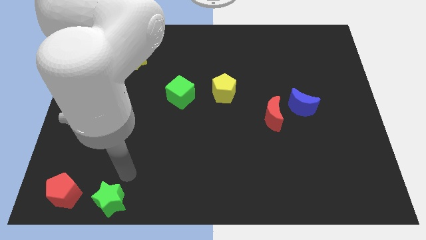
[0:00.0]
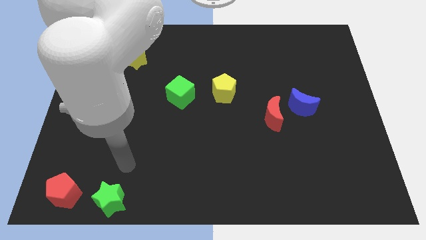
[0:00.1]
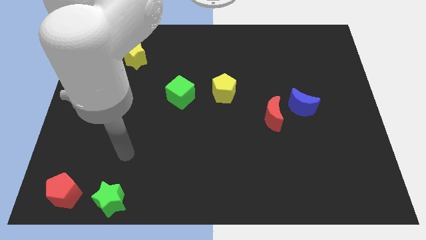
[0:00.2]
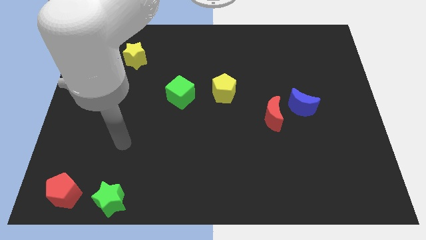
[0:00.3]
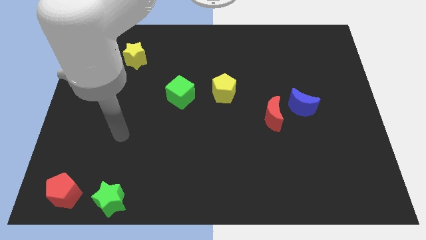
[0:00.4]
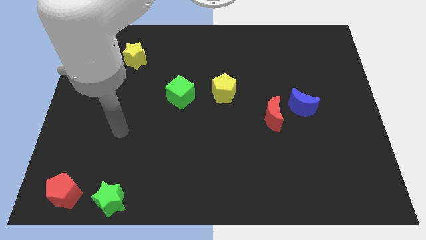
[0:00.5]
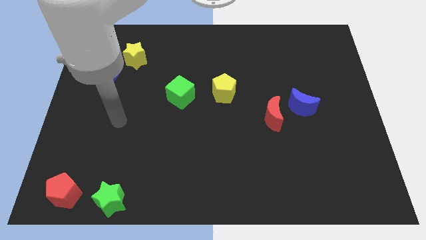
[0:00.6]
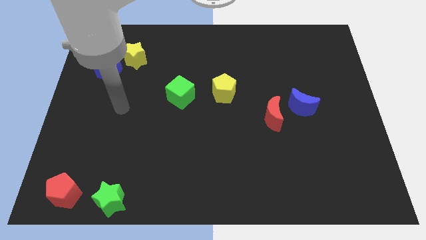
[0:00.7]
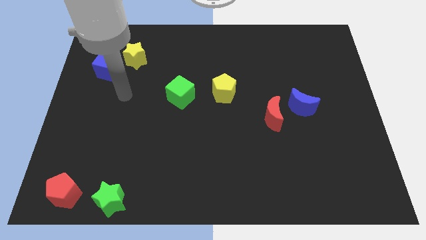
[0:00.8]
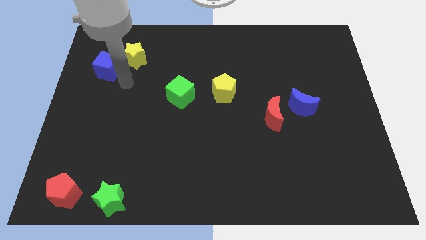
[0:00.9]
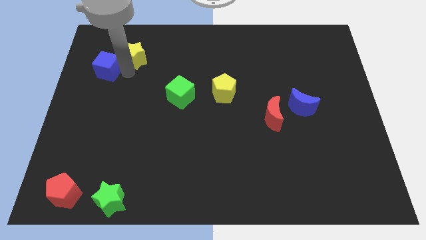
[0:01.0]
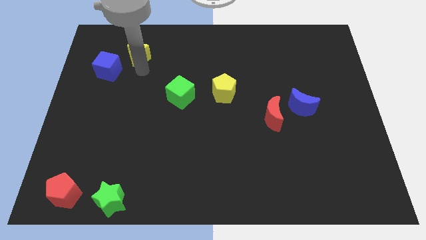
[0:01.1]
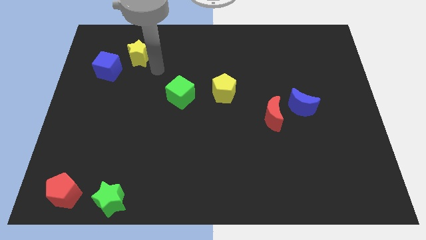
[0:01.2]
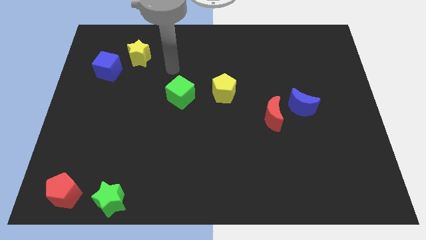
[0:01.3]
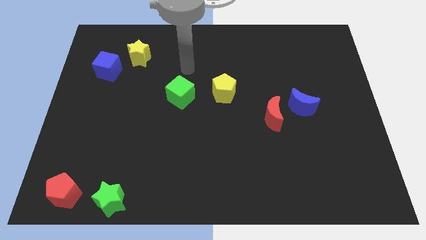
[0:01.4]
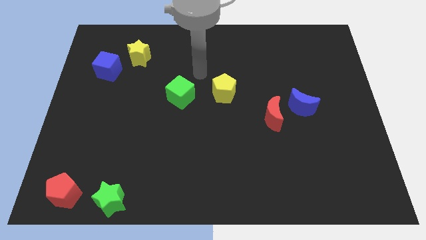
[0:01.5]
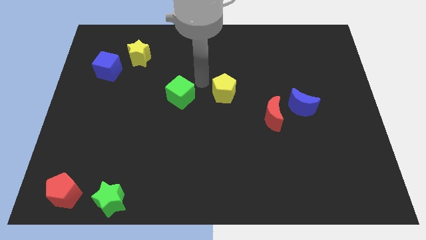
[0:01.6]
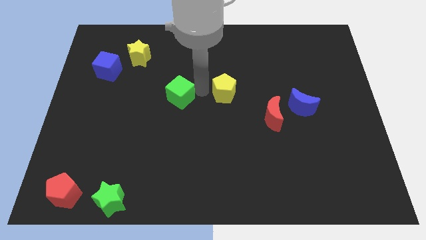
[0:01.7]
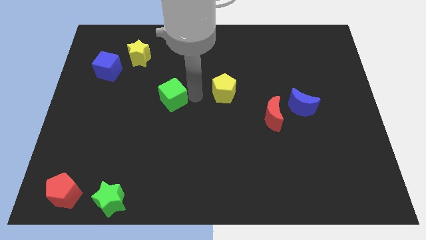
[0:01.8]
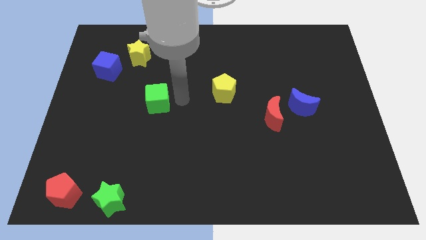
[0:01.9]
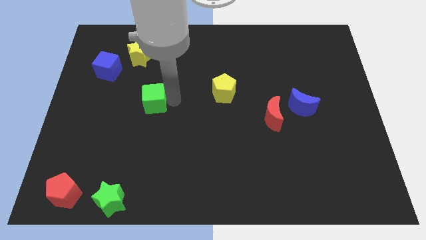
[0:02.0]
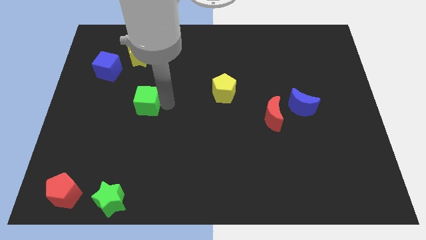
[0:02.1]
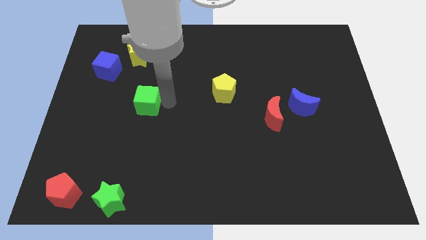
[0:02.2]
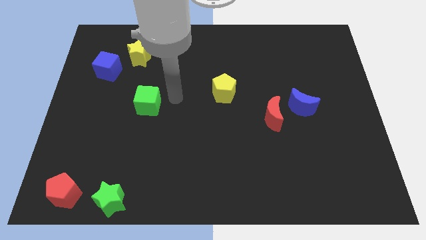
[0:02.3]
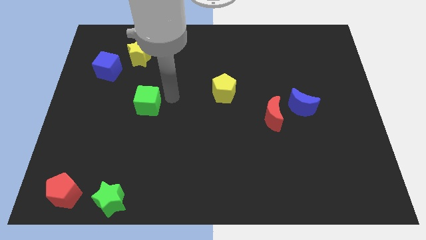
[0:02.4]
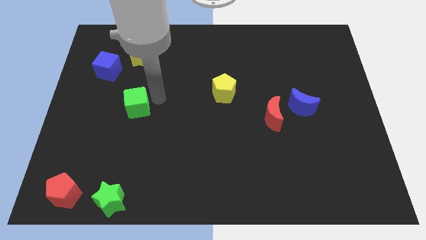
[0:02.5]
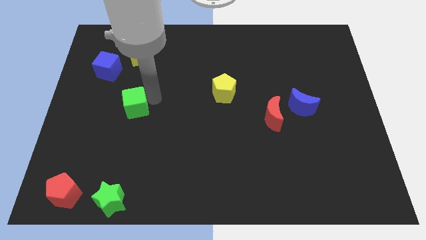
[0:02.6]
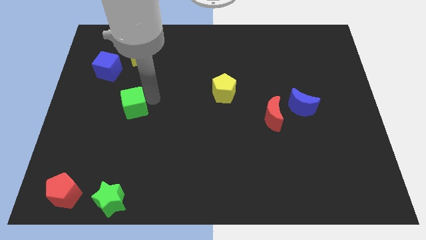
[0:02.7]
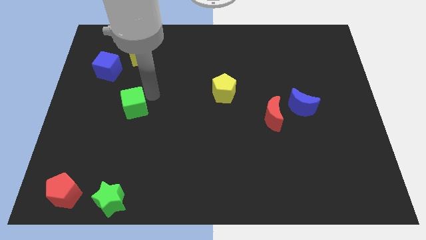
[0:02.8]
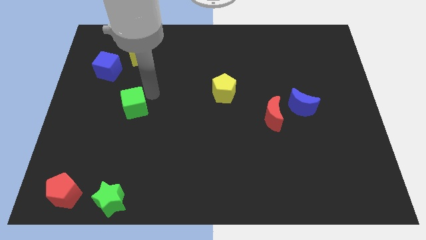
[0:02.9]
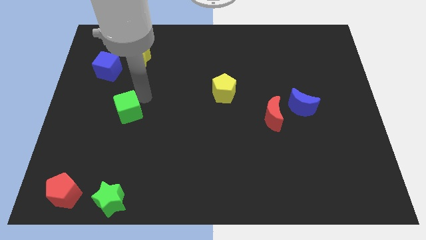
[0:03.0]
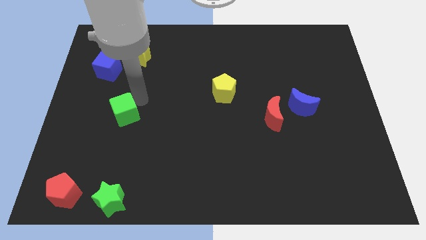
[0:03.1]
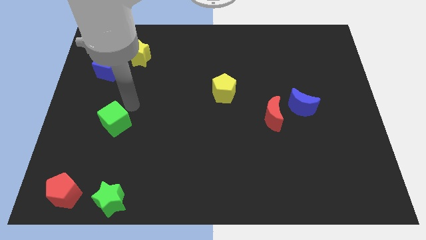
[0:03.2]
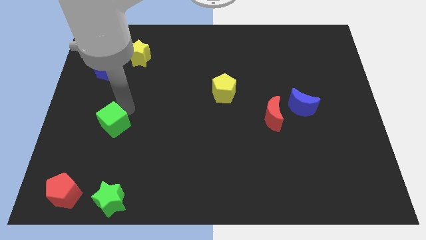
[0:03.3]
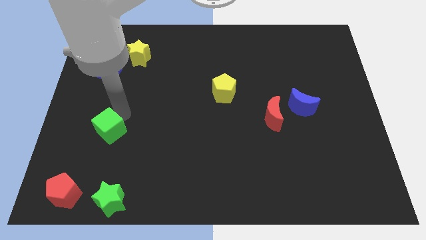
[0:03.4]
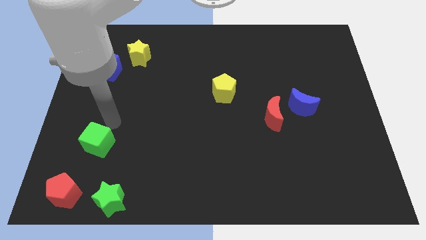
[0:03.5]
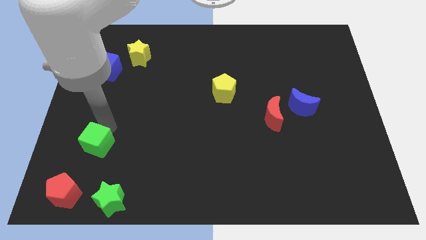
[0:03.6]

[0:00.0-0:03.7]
push the green cube to the bottom of the blue cube

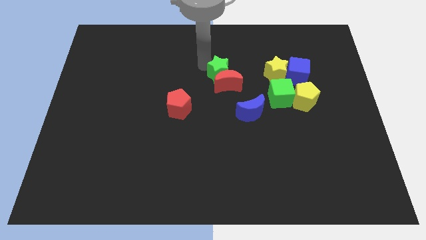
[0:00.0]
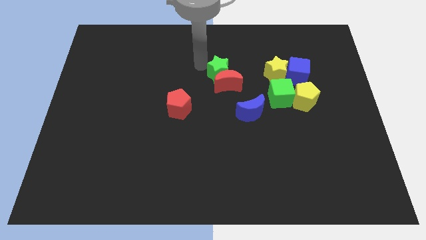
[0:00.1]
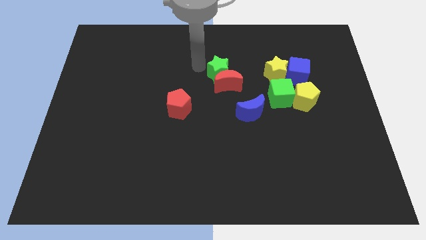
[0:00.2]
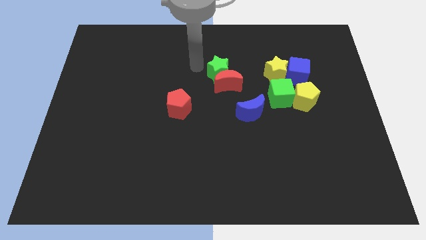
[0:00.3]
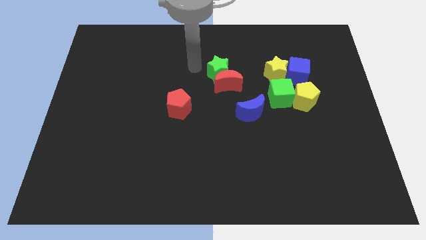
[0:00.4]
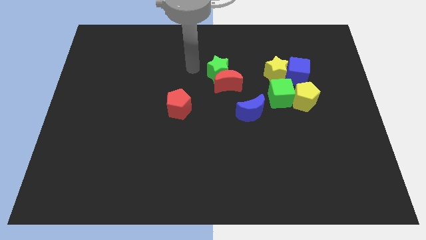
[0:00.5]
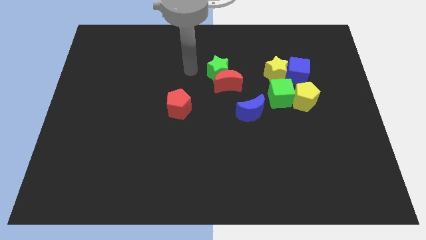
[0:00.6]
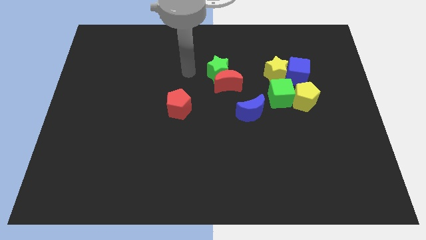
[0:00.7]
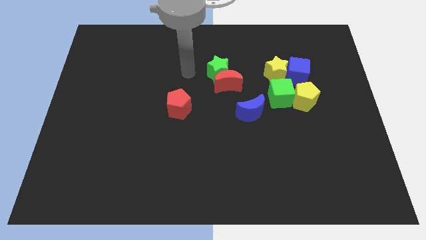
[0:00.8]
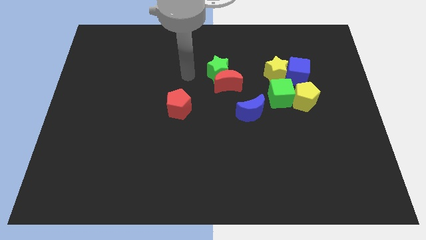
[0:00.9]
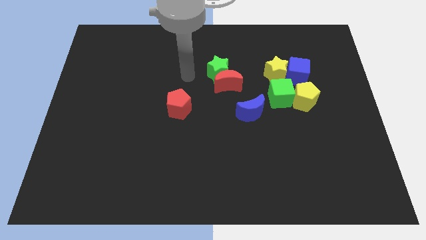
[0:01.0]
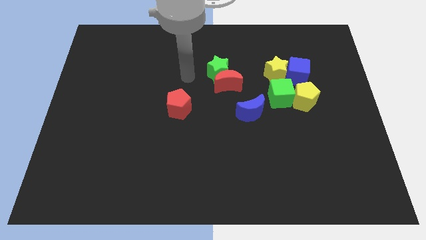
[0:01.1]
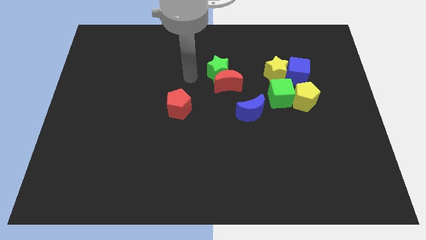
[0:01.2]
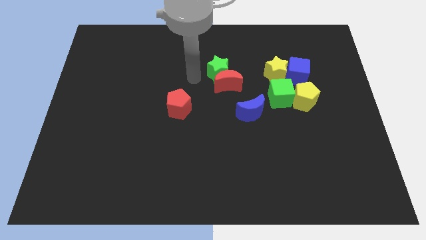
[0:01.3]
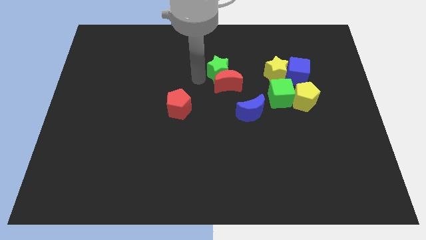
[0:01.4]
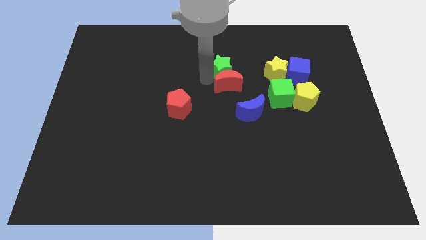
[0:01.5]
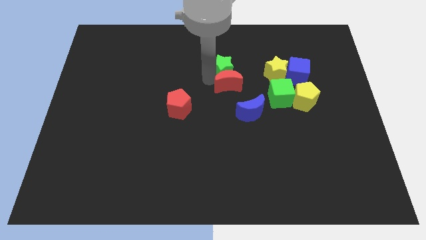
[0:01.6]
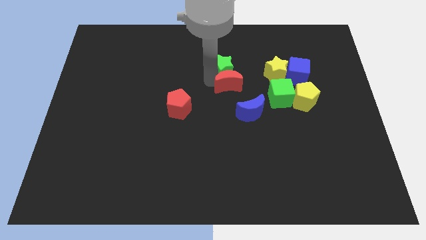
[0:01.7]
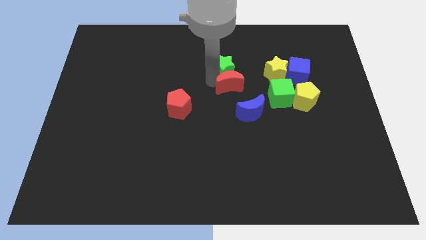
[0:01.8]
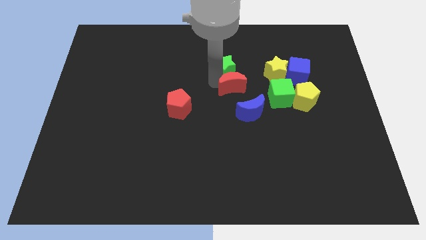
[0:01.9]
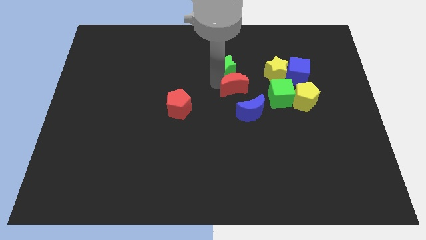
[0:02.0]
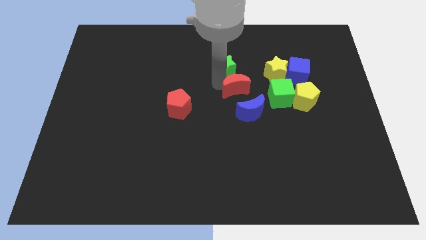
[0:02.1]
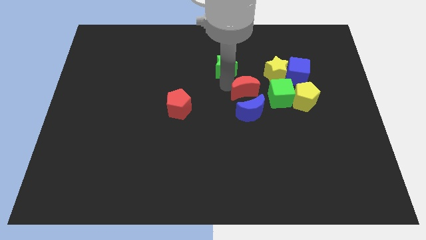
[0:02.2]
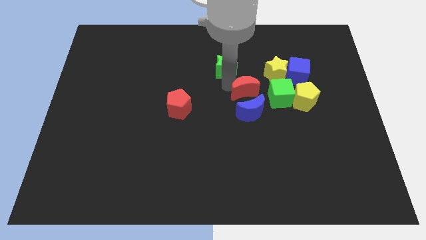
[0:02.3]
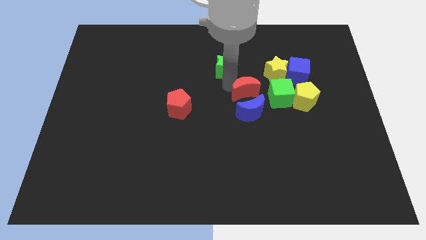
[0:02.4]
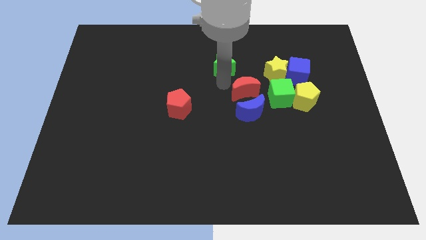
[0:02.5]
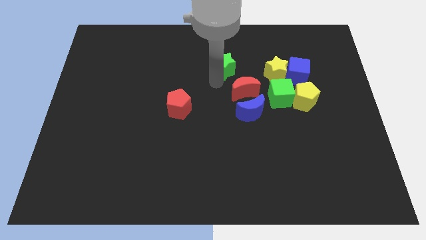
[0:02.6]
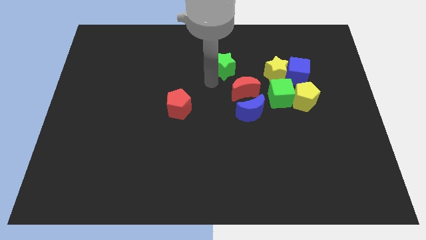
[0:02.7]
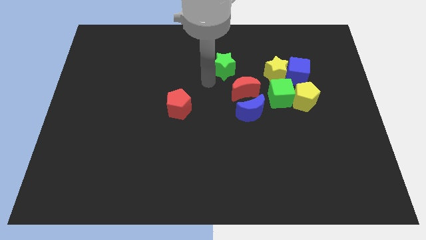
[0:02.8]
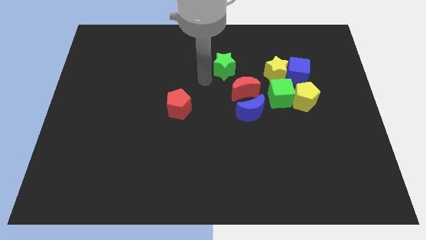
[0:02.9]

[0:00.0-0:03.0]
push the red crescent slightly towards the blue crescent

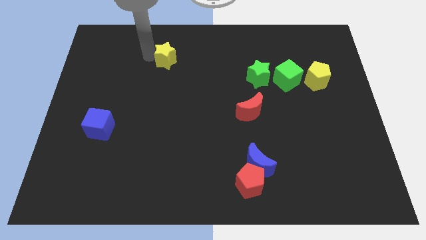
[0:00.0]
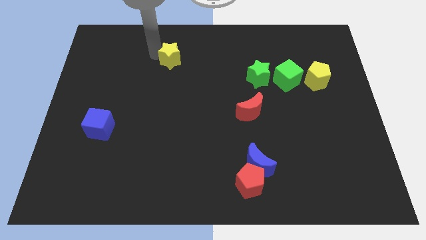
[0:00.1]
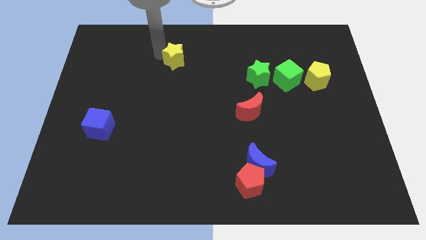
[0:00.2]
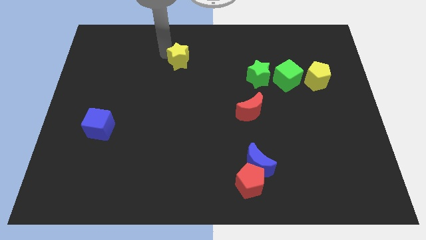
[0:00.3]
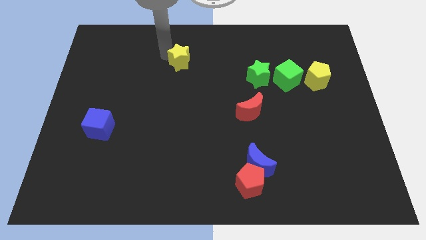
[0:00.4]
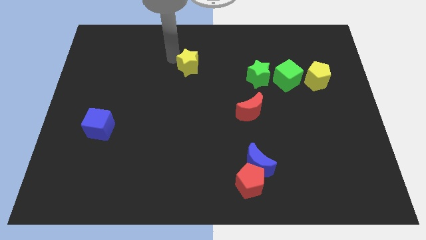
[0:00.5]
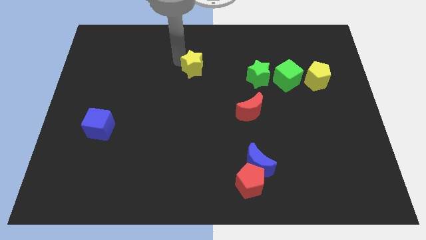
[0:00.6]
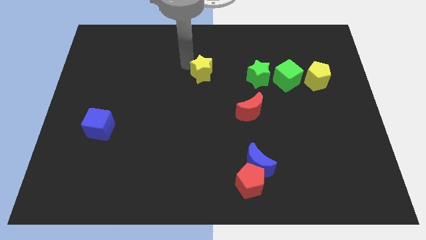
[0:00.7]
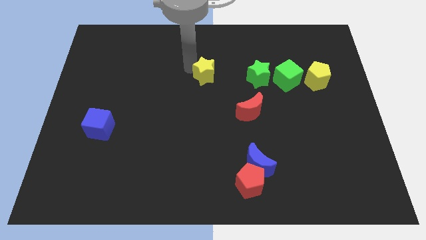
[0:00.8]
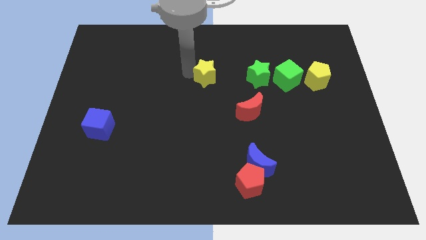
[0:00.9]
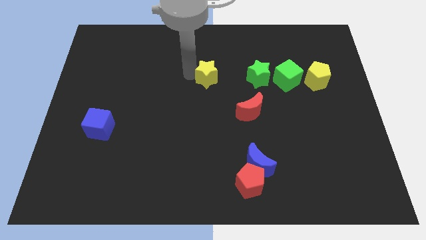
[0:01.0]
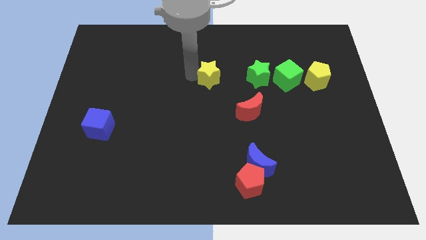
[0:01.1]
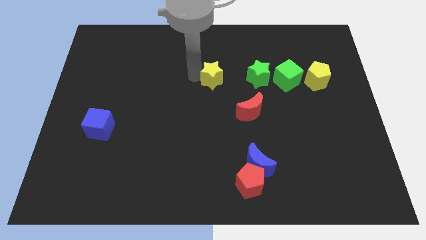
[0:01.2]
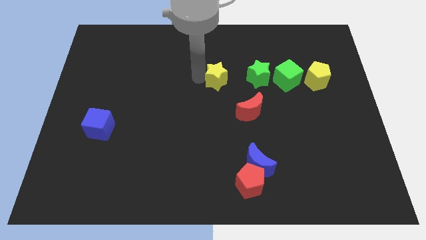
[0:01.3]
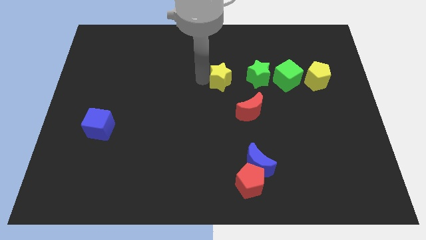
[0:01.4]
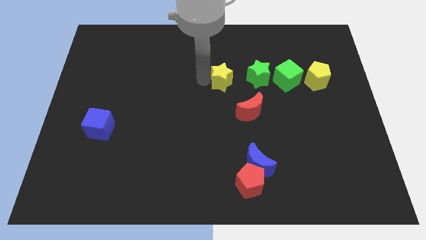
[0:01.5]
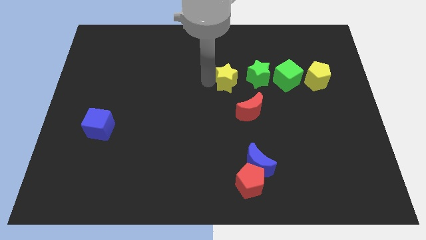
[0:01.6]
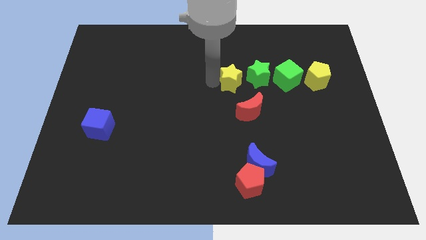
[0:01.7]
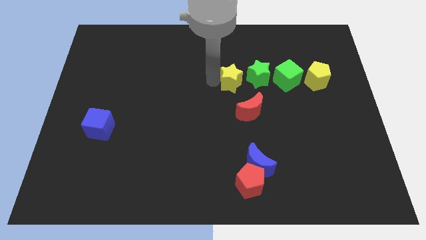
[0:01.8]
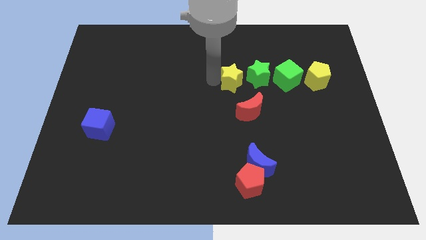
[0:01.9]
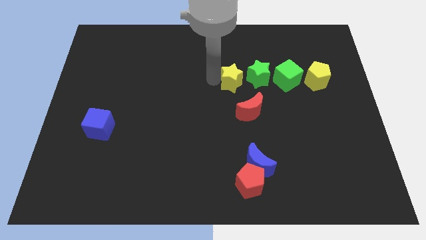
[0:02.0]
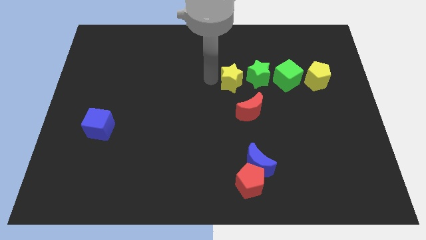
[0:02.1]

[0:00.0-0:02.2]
place the yellow star to the left of green star

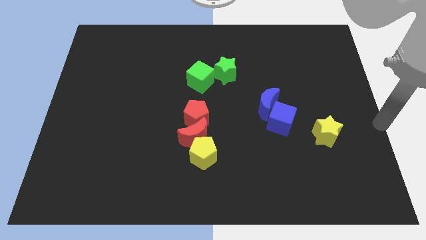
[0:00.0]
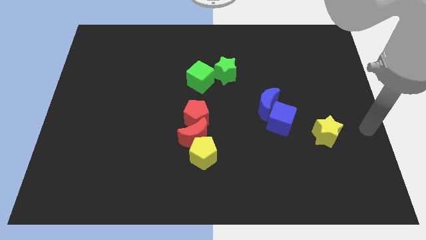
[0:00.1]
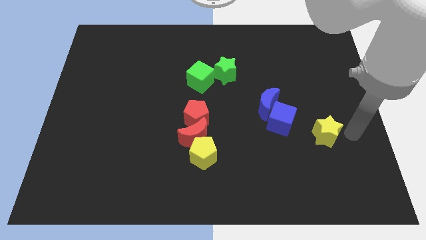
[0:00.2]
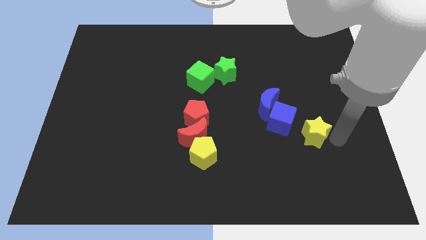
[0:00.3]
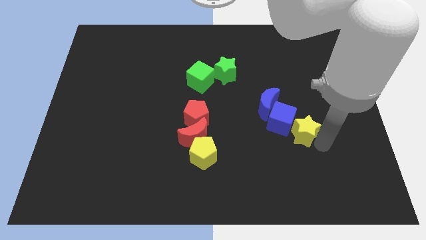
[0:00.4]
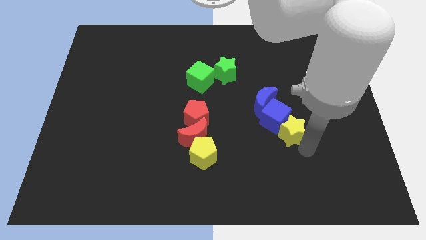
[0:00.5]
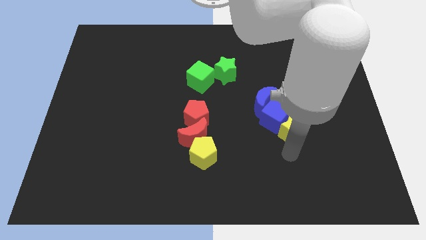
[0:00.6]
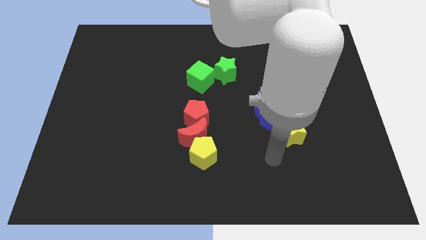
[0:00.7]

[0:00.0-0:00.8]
move the yellow star to the right of the blue cube
